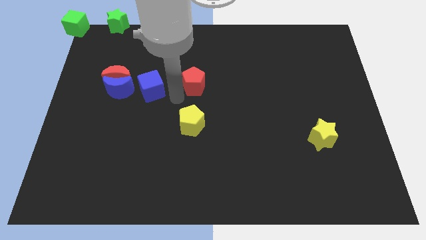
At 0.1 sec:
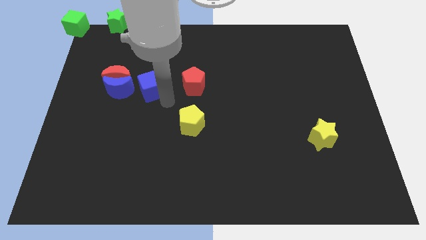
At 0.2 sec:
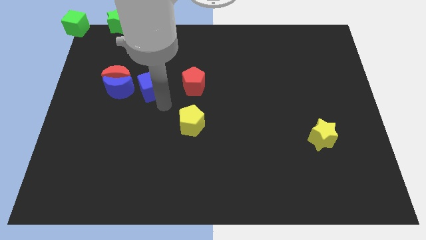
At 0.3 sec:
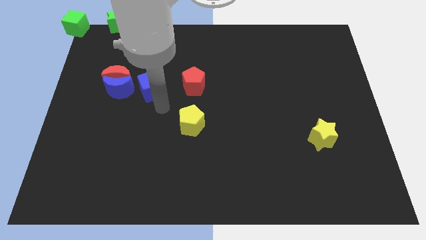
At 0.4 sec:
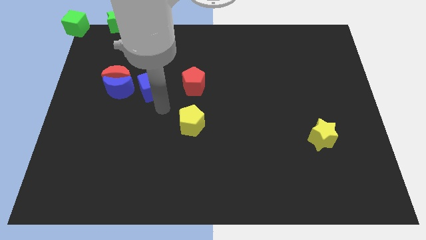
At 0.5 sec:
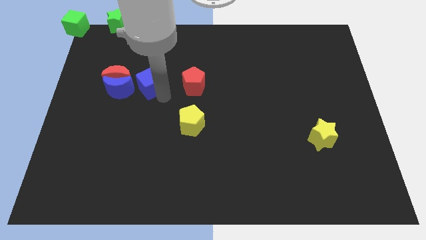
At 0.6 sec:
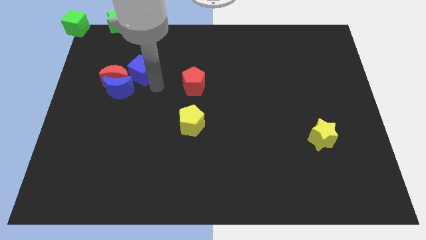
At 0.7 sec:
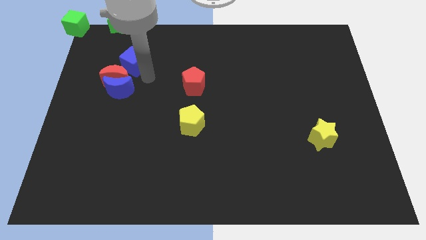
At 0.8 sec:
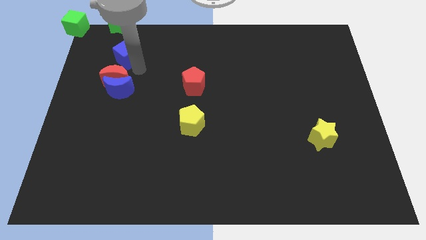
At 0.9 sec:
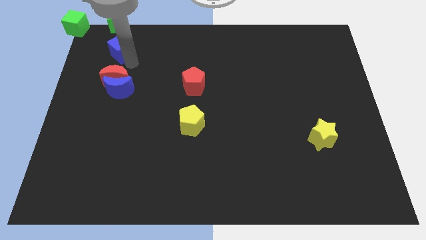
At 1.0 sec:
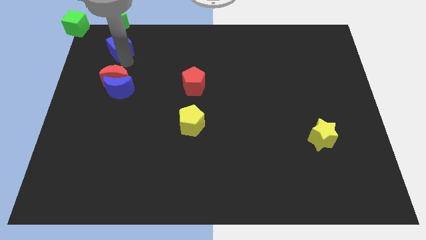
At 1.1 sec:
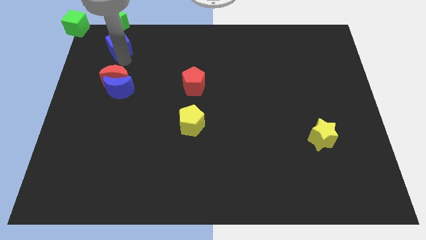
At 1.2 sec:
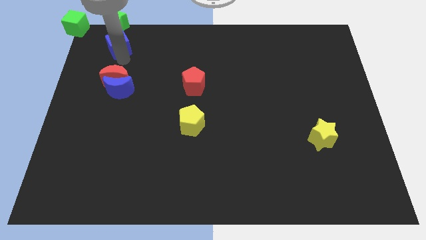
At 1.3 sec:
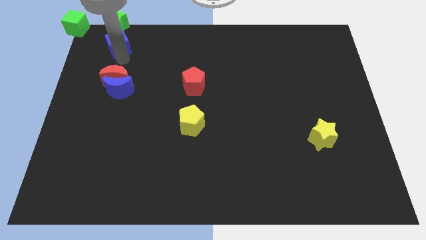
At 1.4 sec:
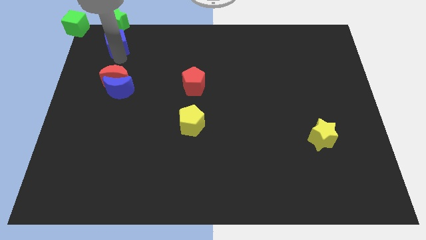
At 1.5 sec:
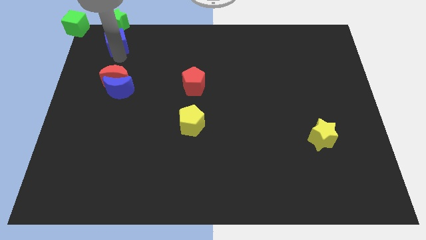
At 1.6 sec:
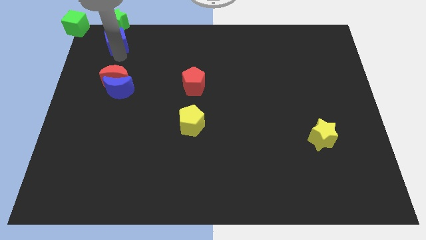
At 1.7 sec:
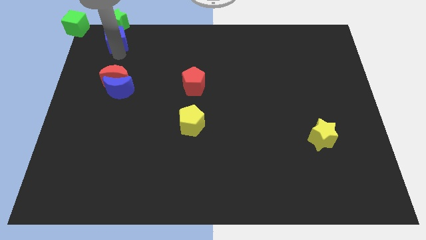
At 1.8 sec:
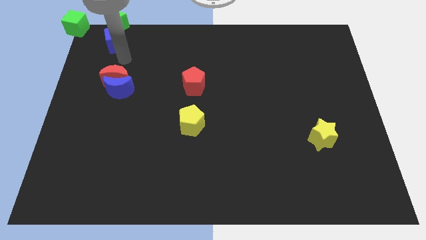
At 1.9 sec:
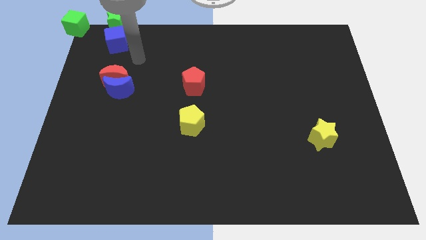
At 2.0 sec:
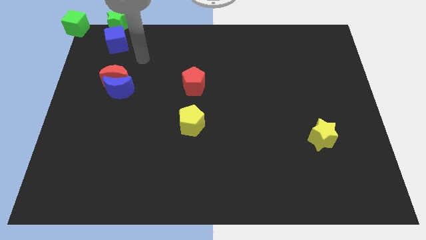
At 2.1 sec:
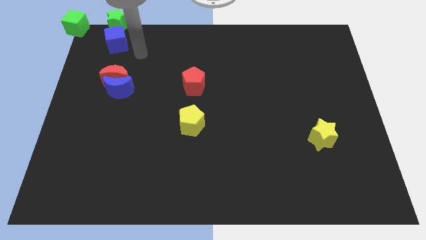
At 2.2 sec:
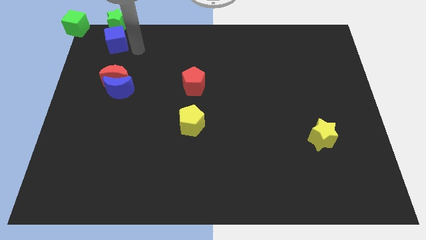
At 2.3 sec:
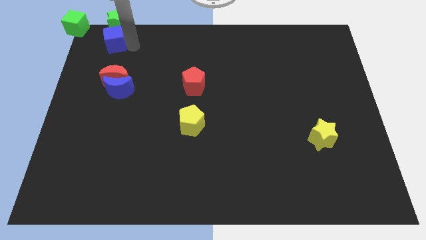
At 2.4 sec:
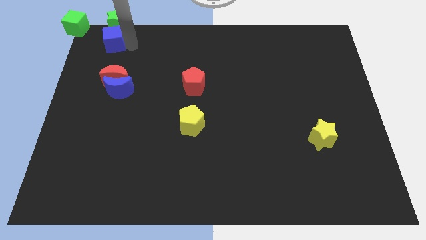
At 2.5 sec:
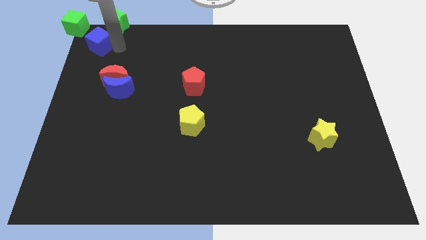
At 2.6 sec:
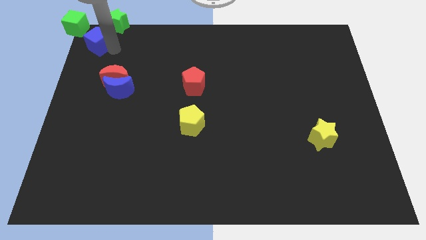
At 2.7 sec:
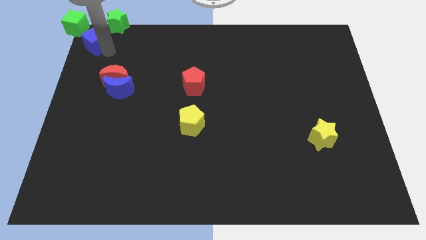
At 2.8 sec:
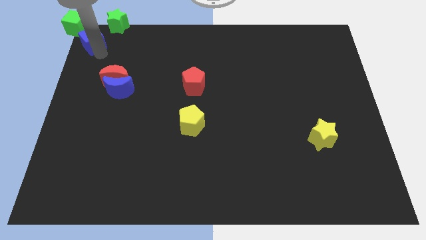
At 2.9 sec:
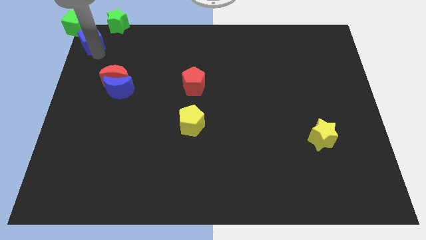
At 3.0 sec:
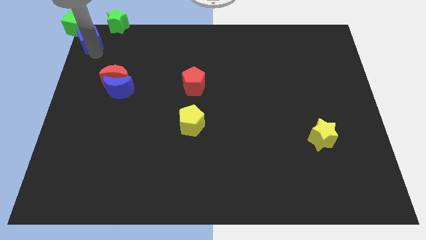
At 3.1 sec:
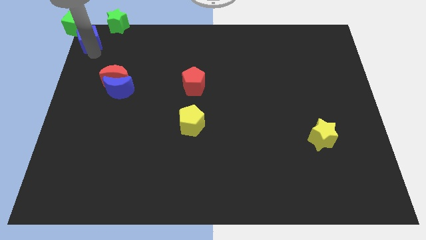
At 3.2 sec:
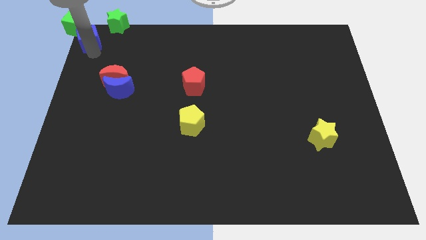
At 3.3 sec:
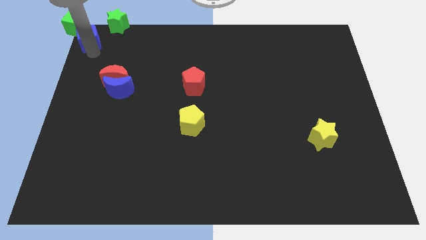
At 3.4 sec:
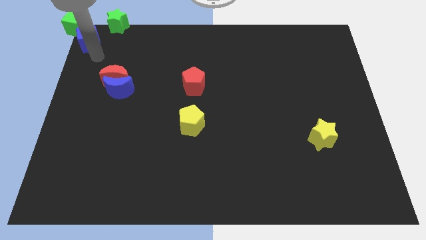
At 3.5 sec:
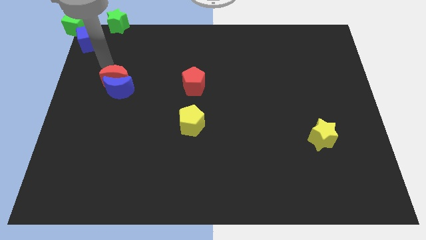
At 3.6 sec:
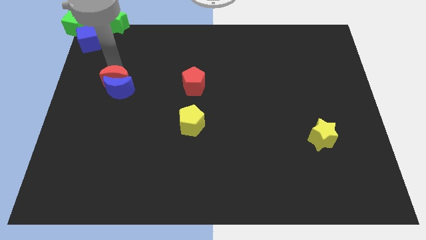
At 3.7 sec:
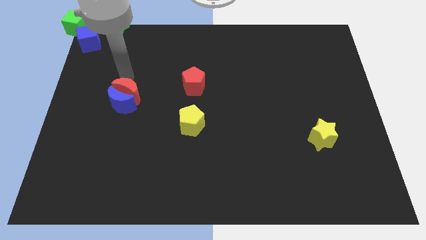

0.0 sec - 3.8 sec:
push the blue cube to the right of the green cube

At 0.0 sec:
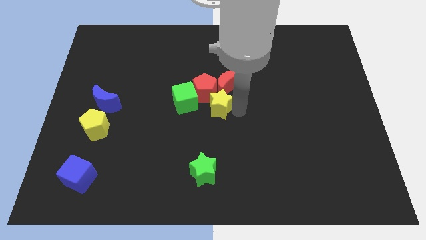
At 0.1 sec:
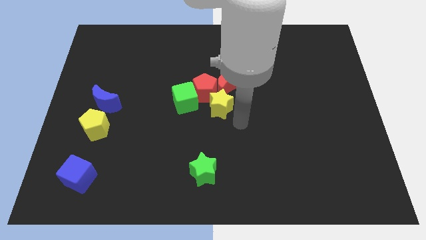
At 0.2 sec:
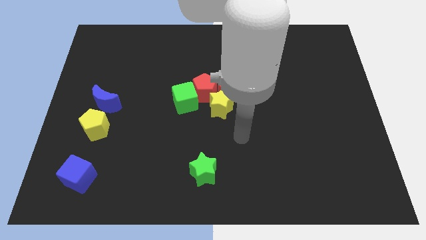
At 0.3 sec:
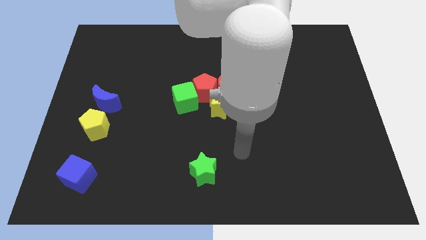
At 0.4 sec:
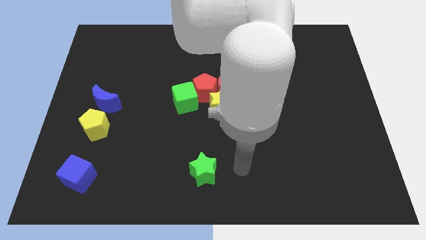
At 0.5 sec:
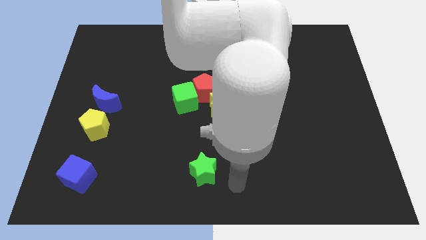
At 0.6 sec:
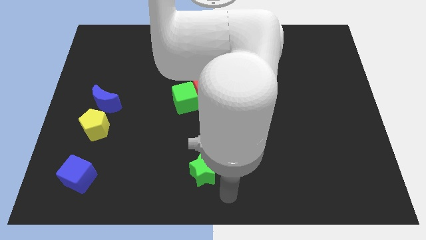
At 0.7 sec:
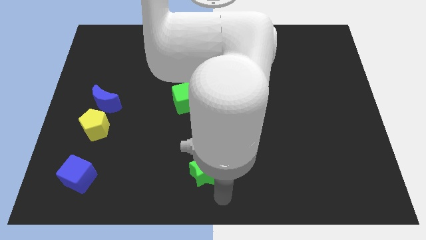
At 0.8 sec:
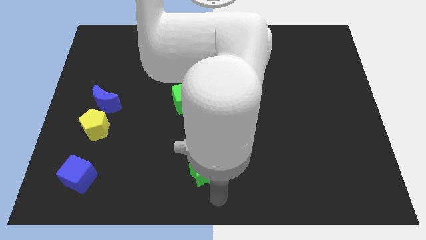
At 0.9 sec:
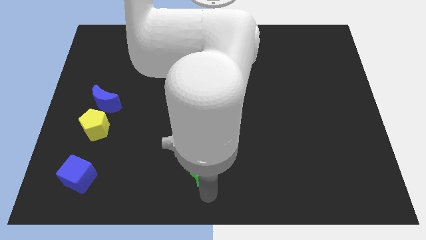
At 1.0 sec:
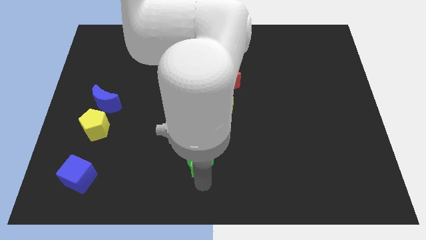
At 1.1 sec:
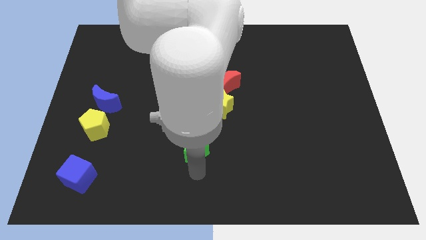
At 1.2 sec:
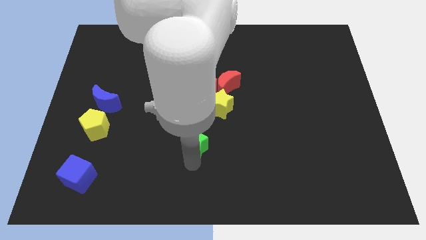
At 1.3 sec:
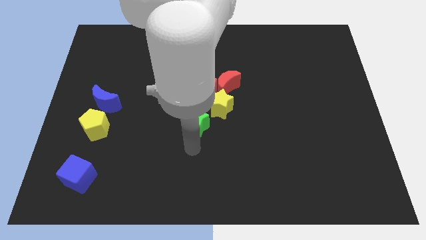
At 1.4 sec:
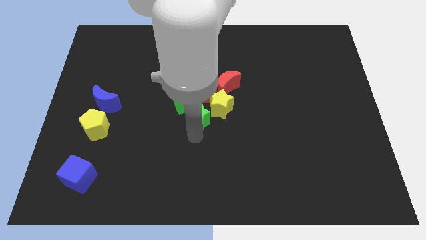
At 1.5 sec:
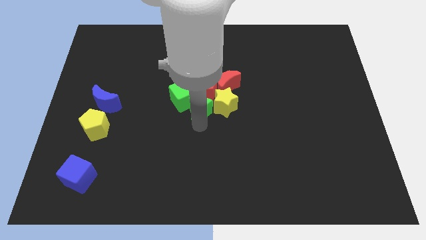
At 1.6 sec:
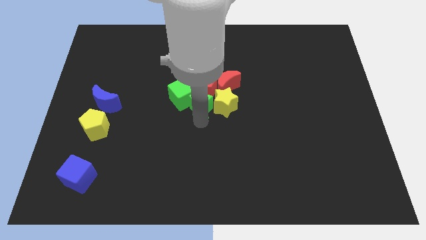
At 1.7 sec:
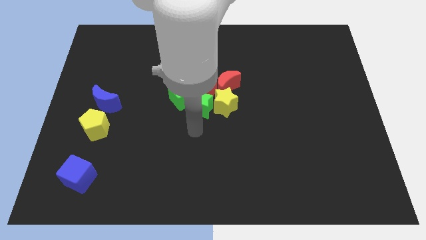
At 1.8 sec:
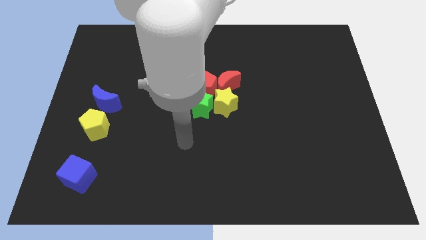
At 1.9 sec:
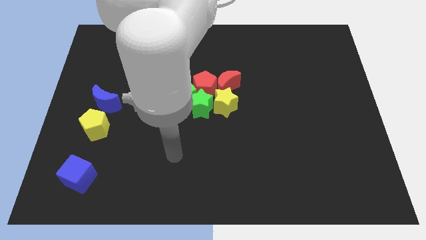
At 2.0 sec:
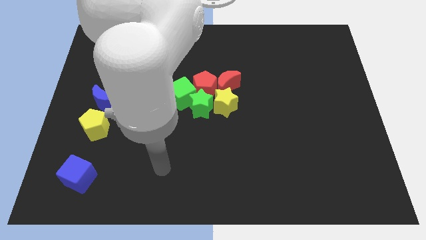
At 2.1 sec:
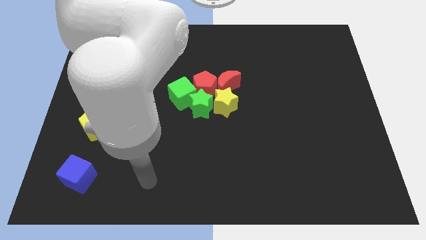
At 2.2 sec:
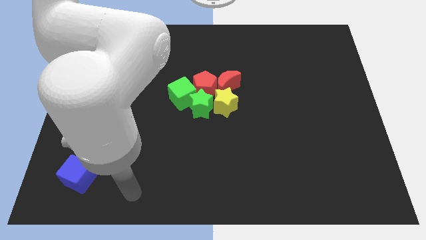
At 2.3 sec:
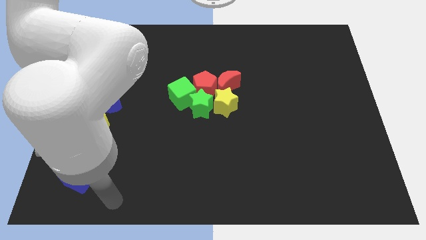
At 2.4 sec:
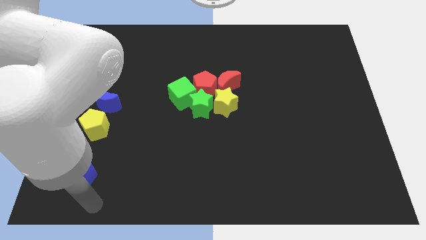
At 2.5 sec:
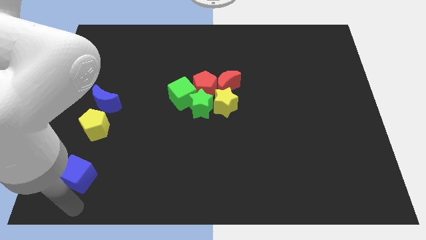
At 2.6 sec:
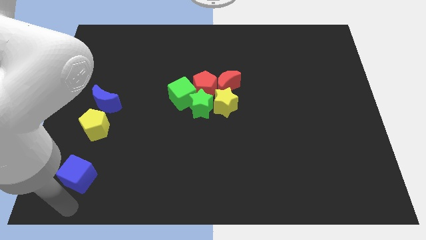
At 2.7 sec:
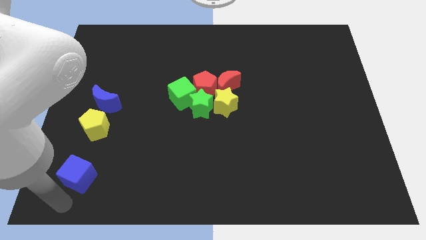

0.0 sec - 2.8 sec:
move the green star to the left side of the yellow star

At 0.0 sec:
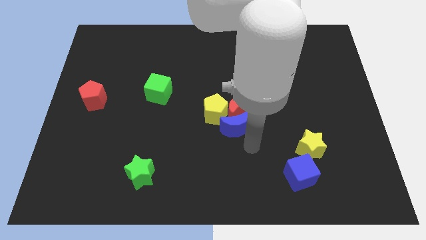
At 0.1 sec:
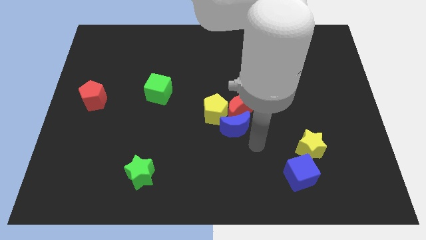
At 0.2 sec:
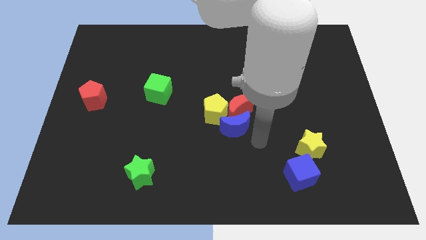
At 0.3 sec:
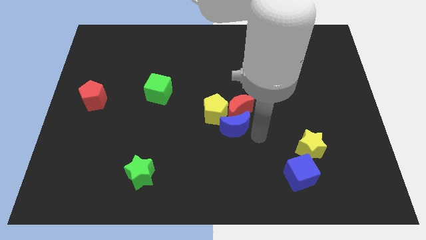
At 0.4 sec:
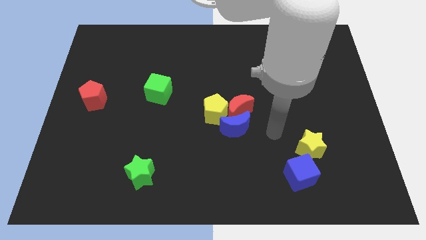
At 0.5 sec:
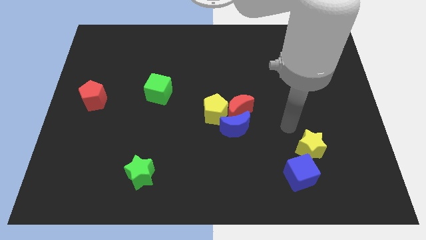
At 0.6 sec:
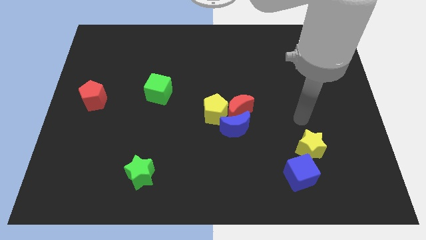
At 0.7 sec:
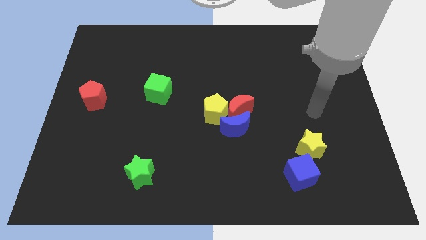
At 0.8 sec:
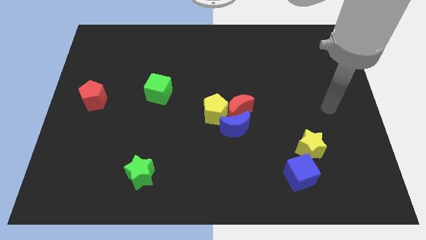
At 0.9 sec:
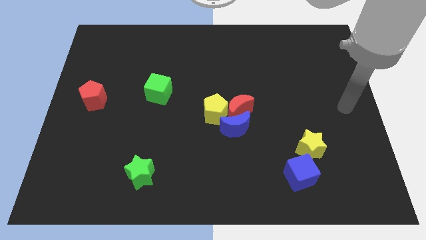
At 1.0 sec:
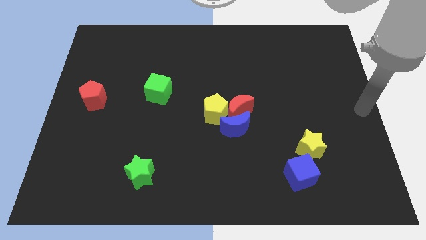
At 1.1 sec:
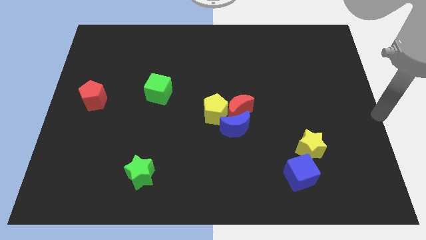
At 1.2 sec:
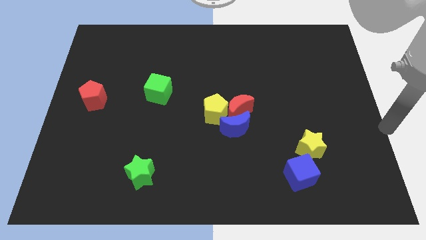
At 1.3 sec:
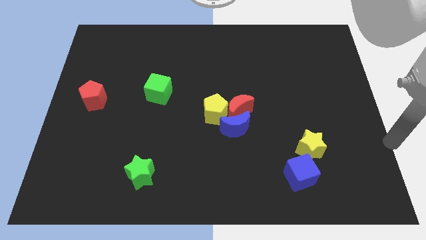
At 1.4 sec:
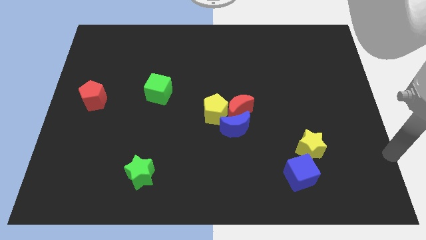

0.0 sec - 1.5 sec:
go and move your hand to the right of the yellow star

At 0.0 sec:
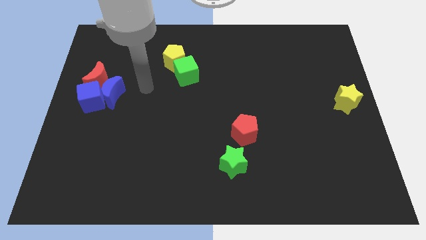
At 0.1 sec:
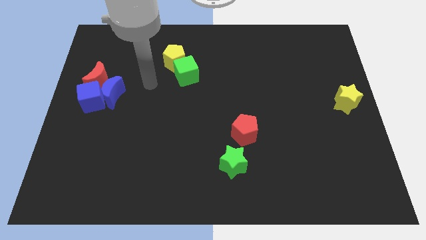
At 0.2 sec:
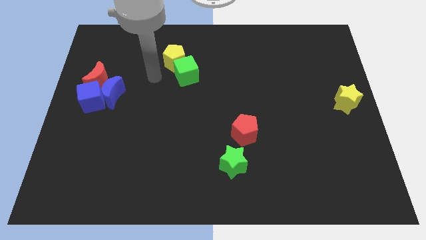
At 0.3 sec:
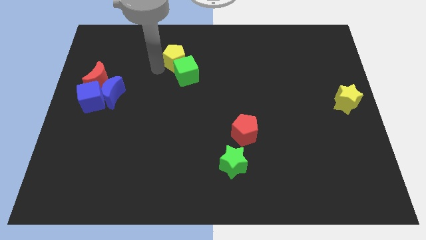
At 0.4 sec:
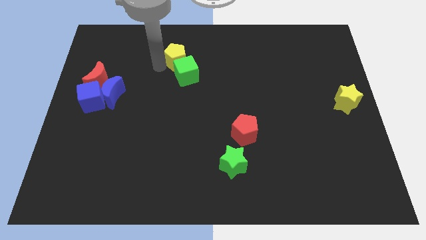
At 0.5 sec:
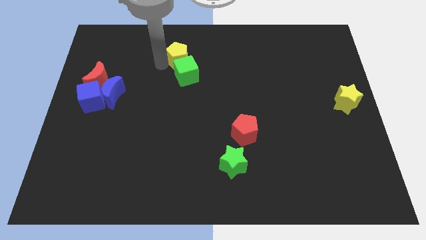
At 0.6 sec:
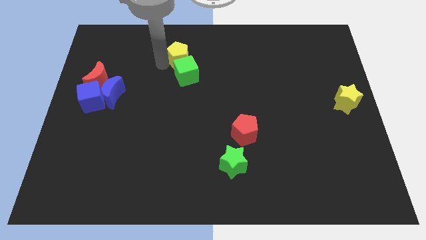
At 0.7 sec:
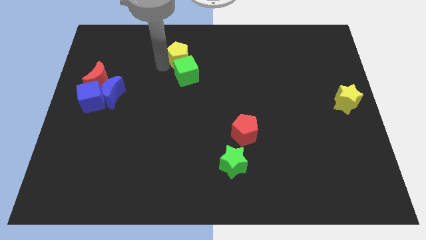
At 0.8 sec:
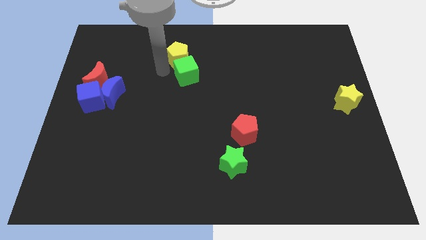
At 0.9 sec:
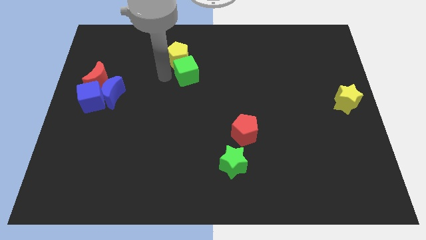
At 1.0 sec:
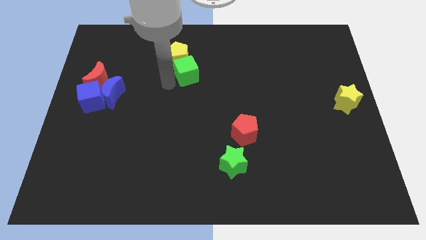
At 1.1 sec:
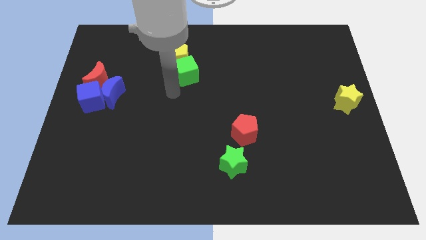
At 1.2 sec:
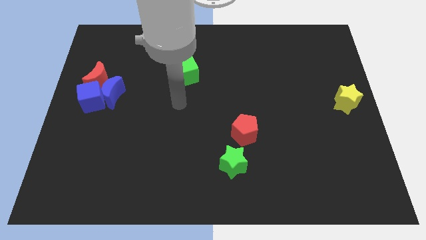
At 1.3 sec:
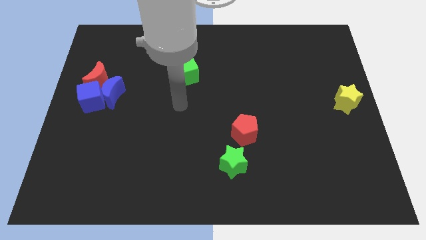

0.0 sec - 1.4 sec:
place the yellow pentagon at the top of green cube
